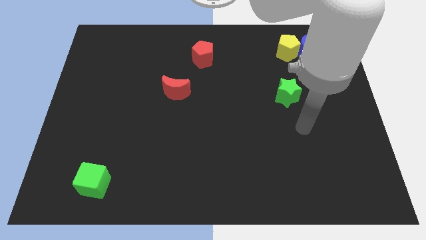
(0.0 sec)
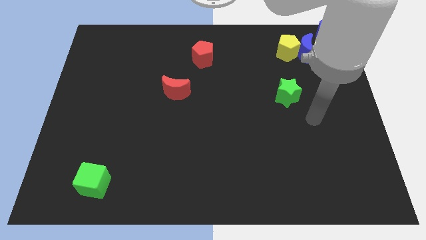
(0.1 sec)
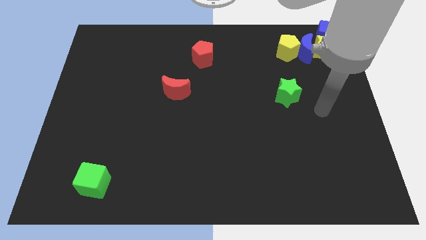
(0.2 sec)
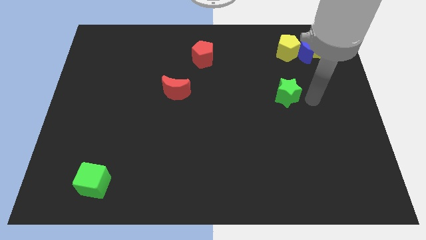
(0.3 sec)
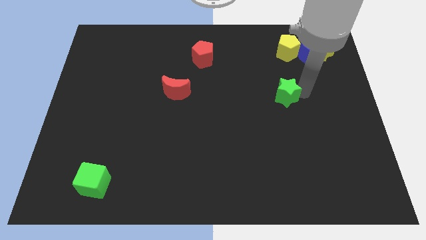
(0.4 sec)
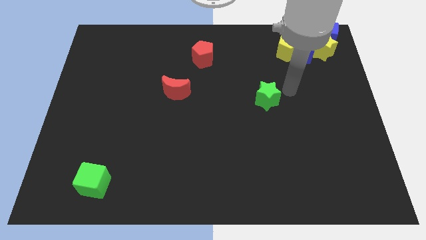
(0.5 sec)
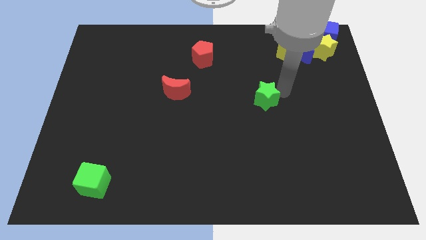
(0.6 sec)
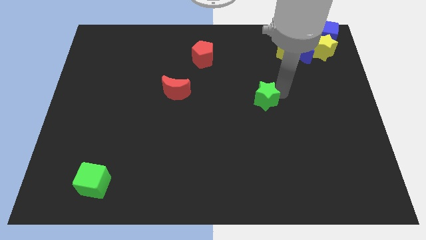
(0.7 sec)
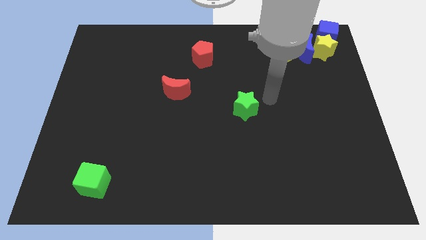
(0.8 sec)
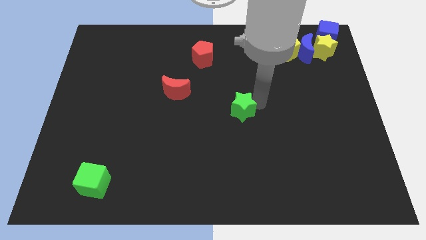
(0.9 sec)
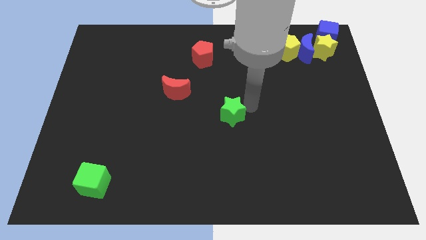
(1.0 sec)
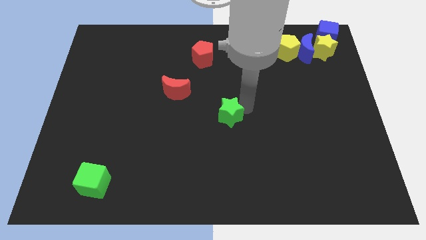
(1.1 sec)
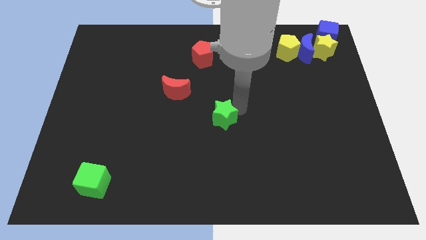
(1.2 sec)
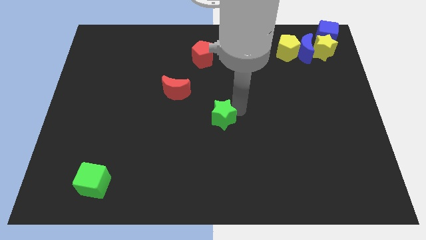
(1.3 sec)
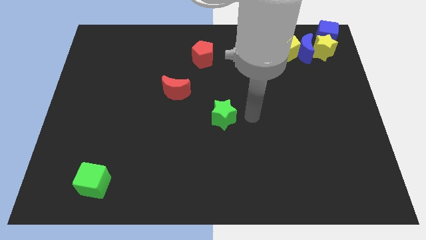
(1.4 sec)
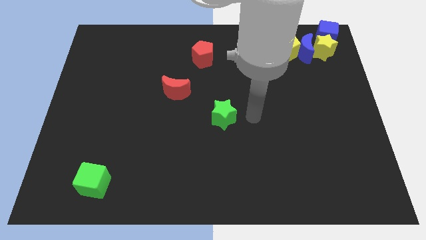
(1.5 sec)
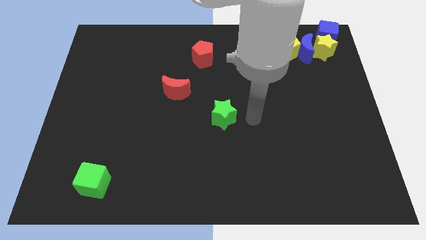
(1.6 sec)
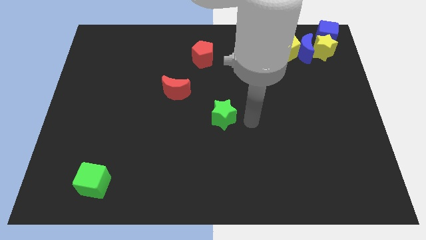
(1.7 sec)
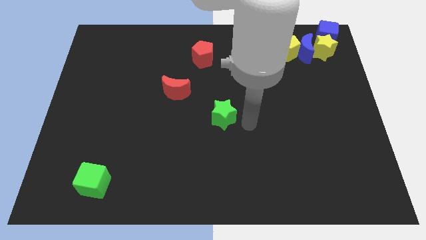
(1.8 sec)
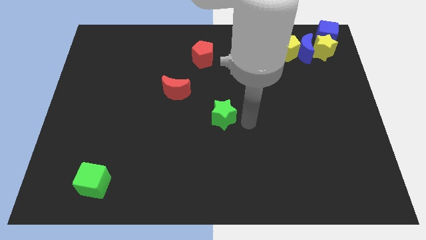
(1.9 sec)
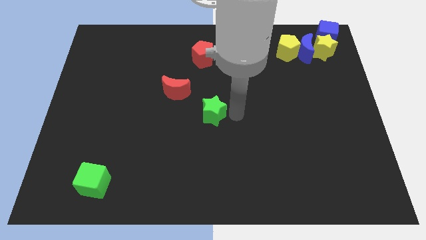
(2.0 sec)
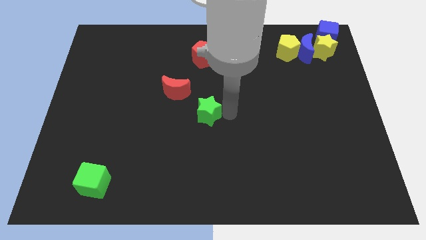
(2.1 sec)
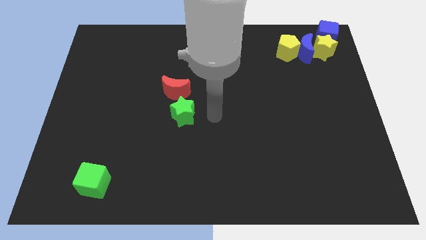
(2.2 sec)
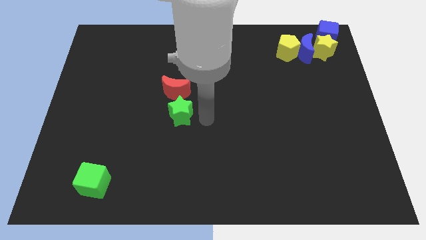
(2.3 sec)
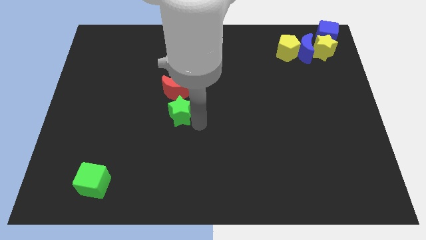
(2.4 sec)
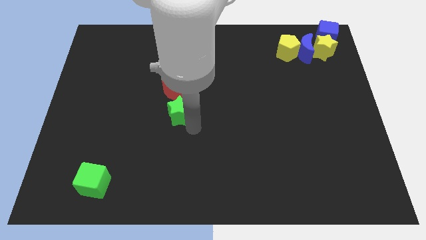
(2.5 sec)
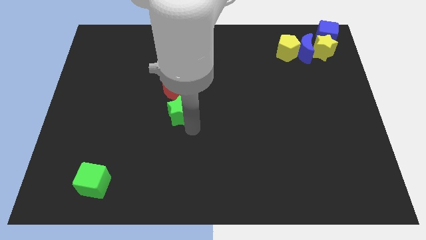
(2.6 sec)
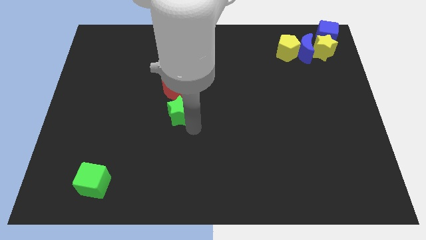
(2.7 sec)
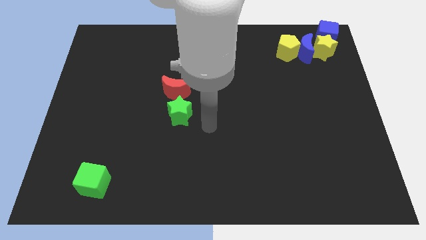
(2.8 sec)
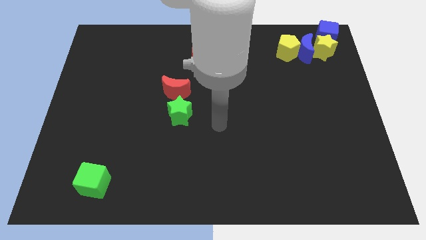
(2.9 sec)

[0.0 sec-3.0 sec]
push the green star to the bottom of the red crescent

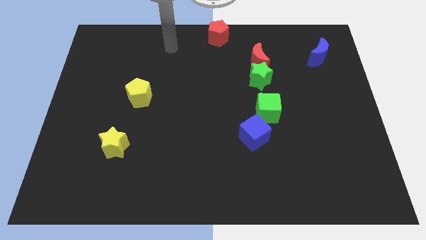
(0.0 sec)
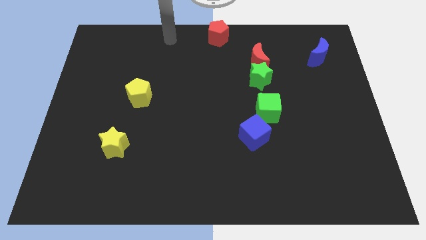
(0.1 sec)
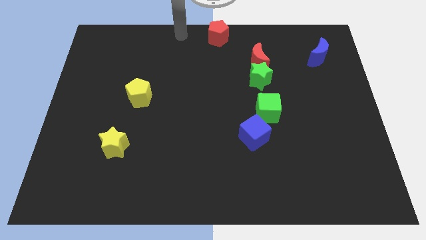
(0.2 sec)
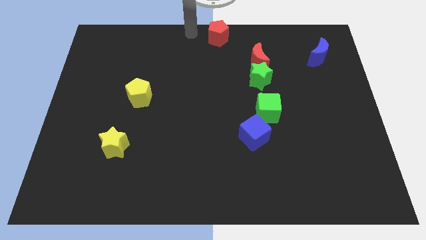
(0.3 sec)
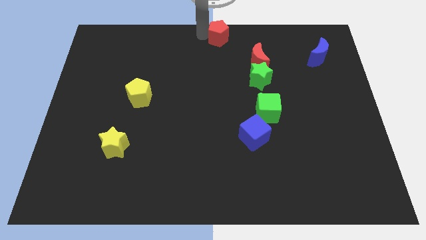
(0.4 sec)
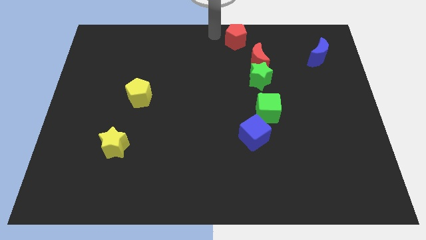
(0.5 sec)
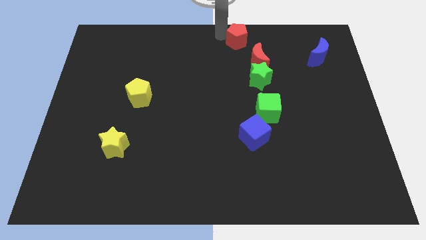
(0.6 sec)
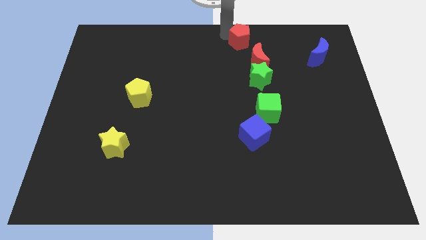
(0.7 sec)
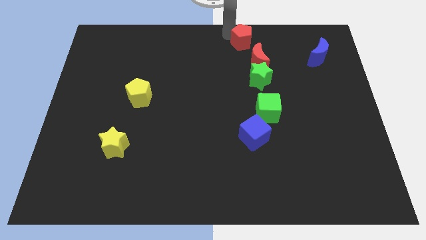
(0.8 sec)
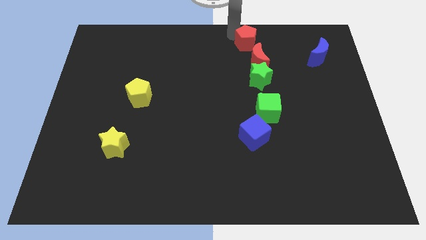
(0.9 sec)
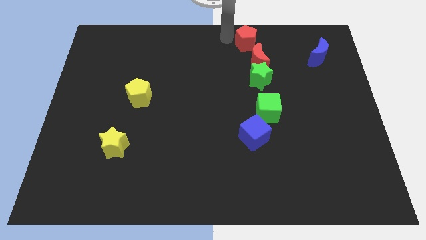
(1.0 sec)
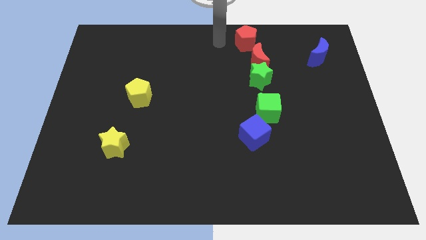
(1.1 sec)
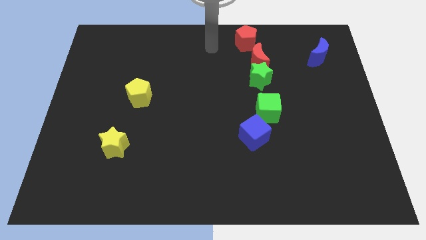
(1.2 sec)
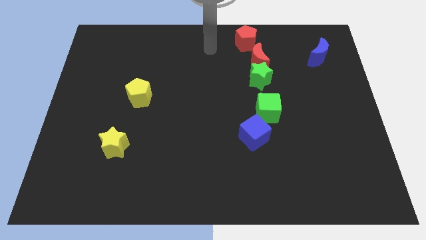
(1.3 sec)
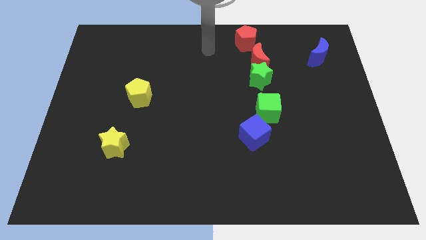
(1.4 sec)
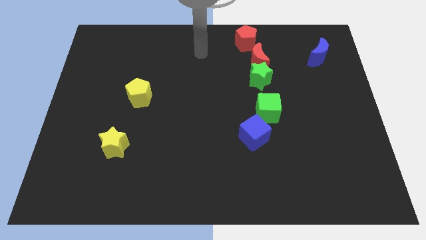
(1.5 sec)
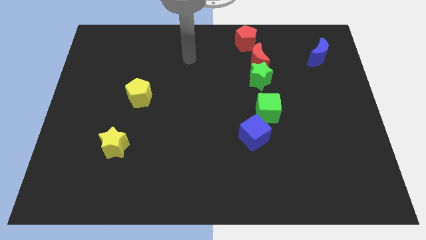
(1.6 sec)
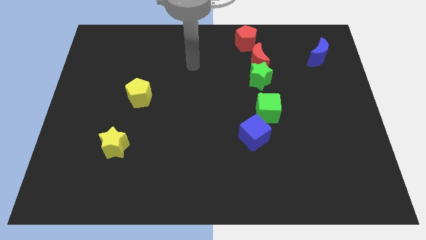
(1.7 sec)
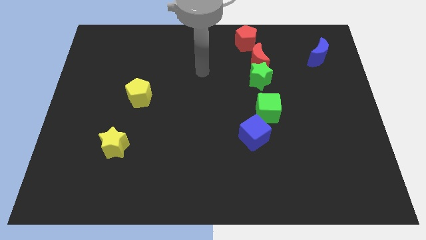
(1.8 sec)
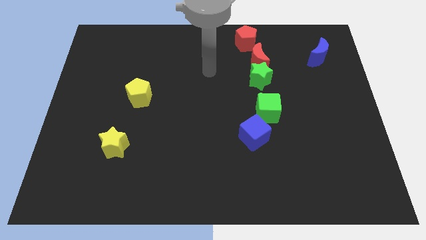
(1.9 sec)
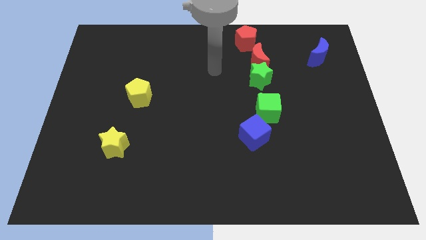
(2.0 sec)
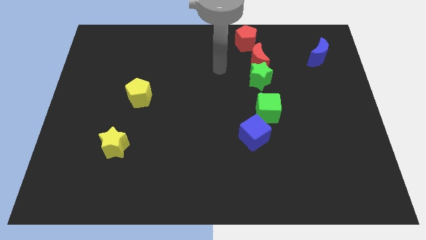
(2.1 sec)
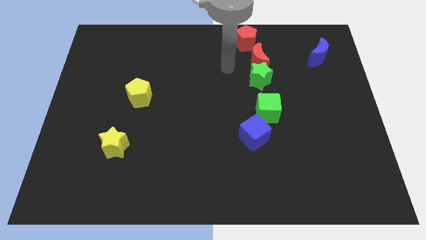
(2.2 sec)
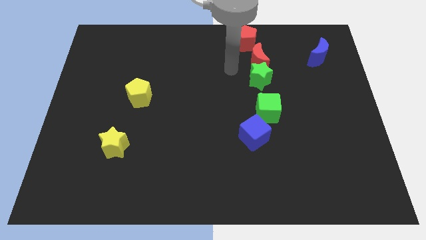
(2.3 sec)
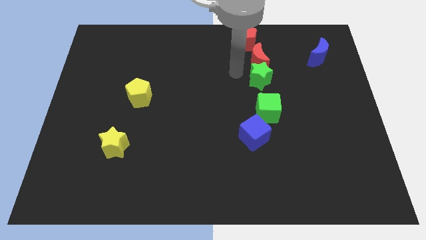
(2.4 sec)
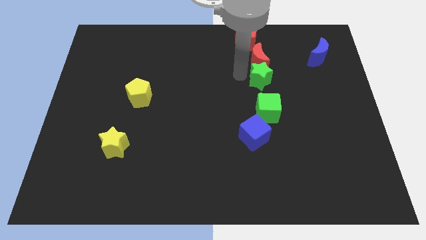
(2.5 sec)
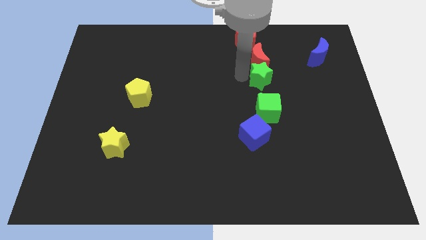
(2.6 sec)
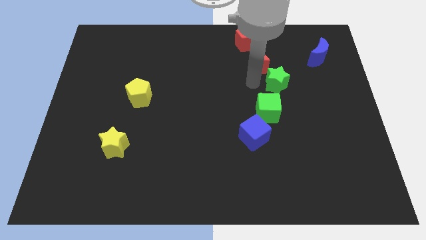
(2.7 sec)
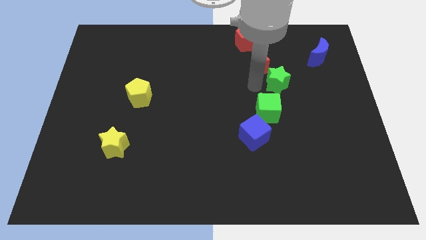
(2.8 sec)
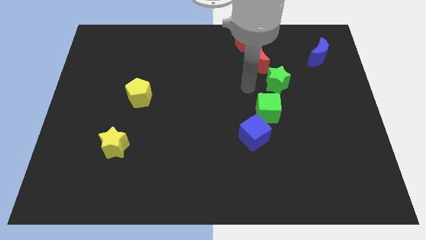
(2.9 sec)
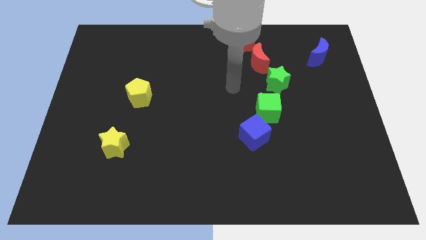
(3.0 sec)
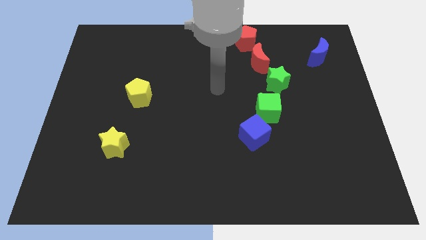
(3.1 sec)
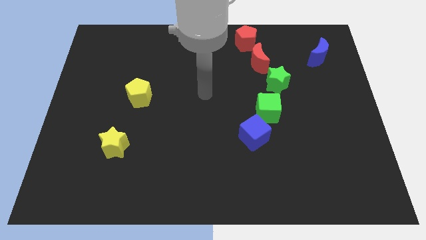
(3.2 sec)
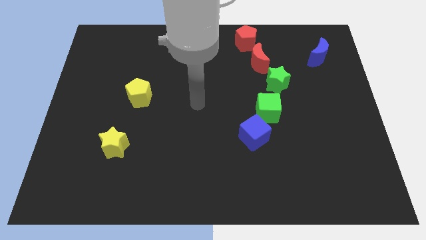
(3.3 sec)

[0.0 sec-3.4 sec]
move the red pentagon and green star diagonally to the red moon

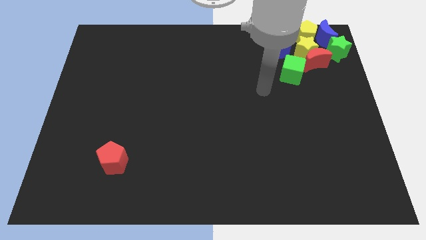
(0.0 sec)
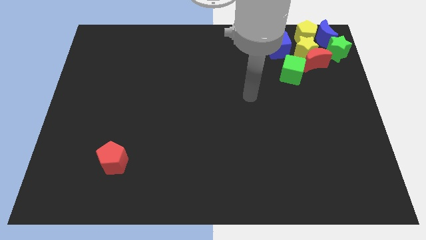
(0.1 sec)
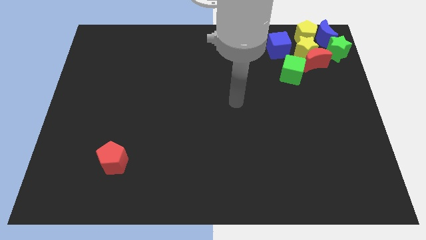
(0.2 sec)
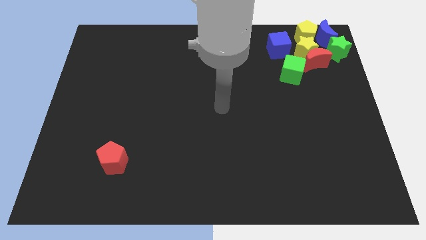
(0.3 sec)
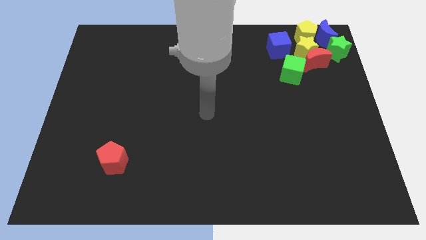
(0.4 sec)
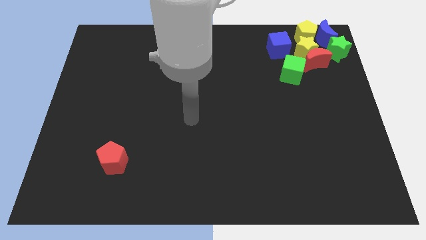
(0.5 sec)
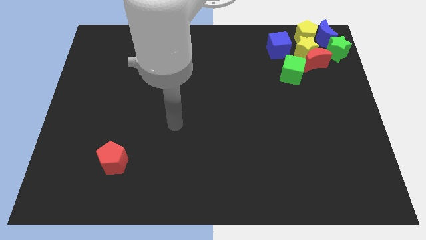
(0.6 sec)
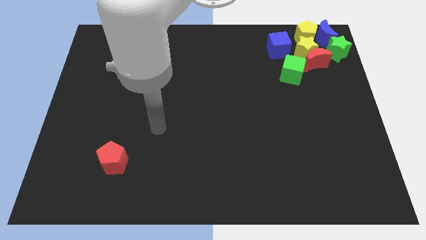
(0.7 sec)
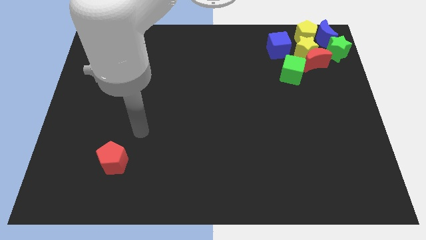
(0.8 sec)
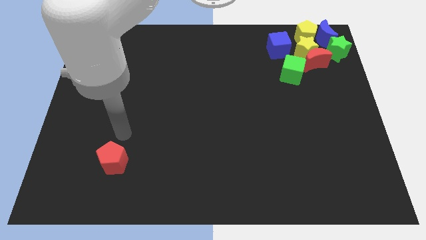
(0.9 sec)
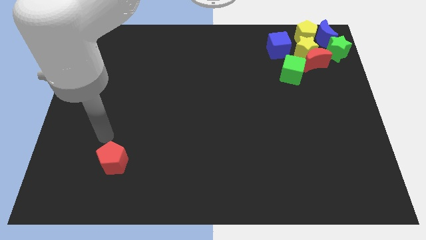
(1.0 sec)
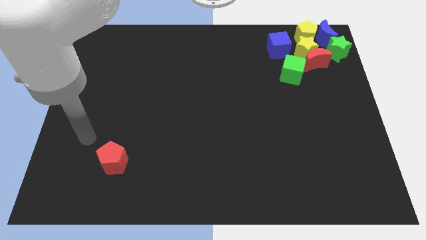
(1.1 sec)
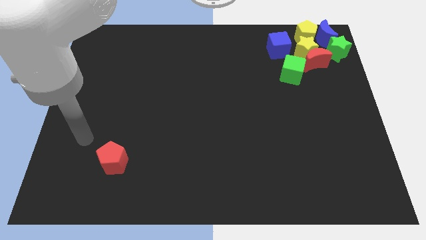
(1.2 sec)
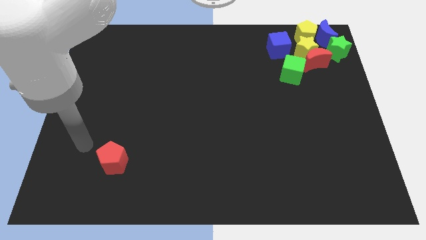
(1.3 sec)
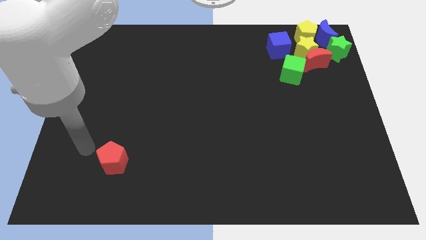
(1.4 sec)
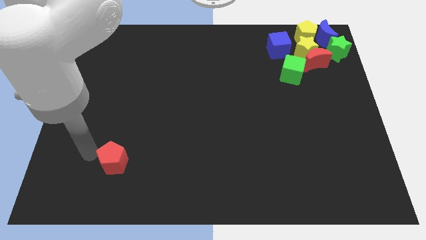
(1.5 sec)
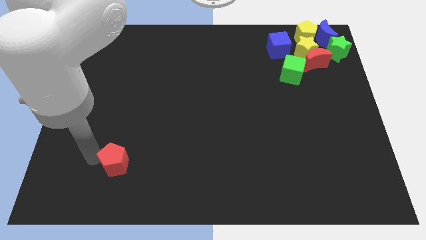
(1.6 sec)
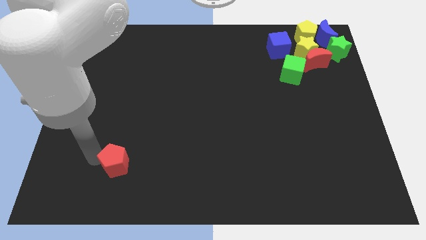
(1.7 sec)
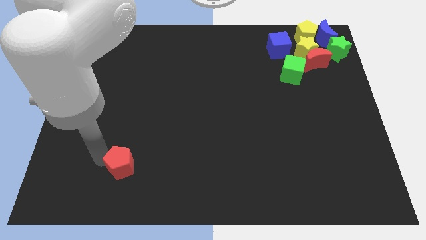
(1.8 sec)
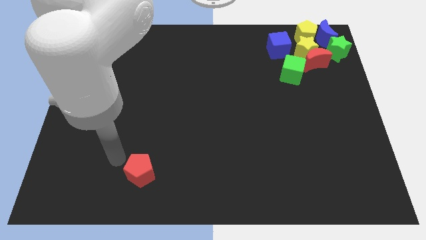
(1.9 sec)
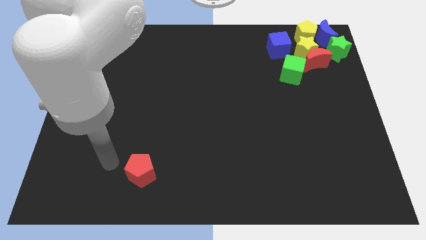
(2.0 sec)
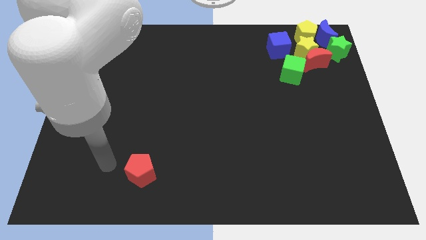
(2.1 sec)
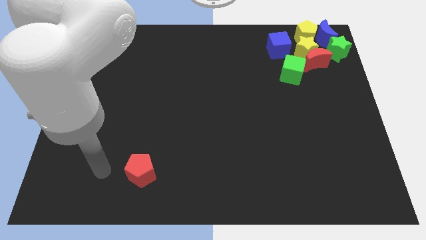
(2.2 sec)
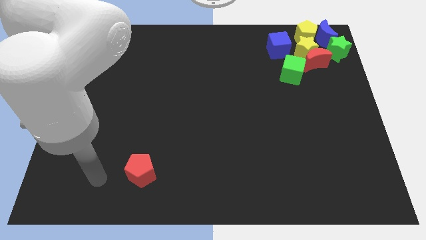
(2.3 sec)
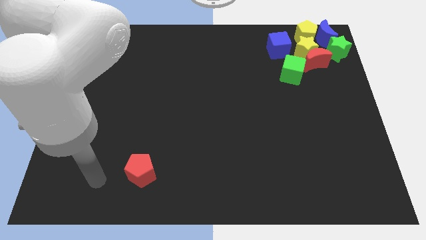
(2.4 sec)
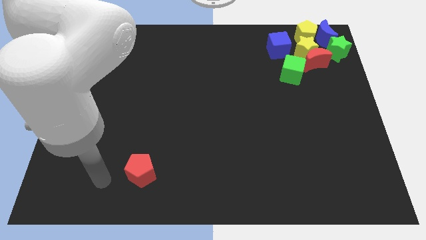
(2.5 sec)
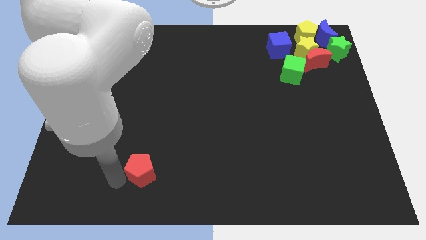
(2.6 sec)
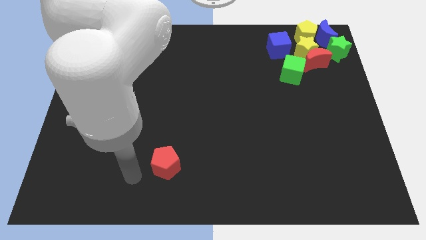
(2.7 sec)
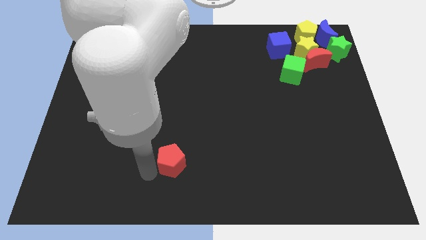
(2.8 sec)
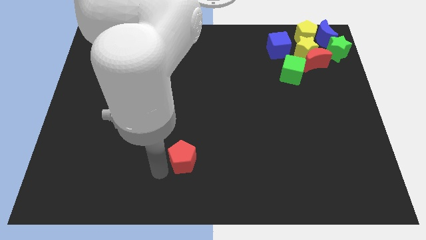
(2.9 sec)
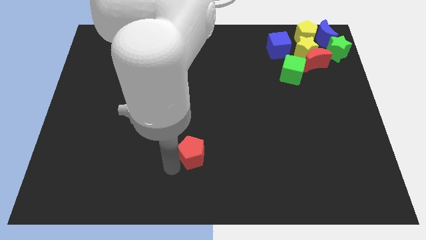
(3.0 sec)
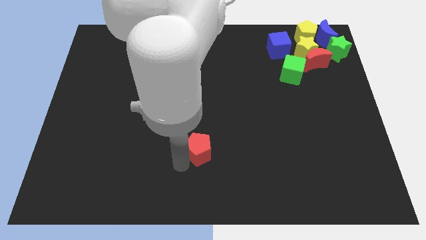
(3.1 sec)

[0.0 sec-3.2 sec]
slide the red pentagon slightly towards right
